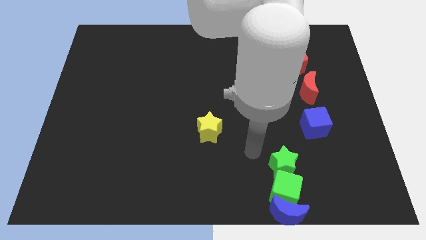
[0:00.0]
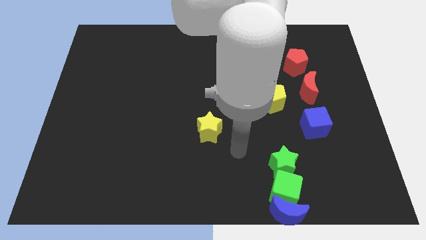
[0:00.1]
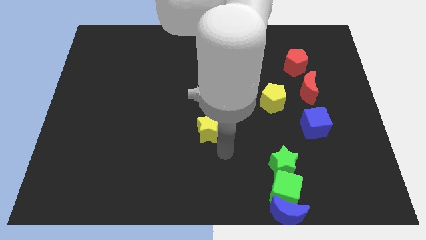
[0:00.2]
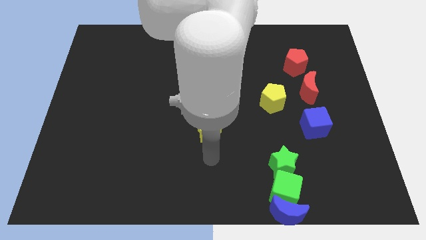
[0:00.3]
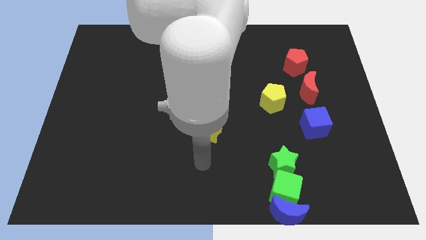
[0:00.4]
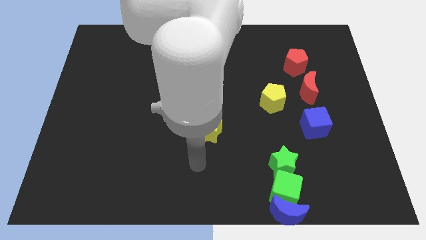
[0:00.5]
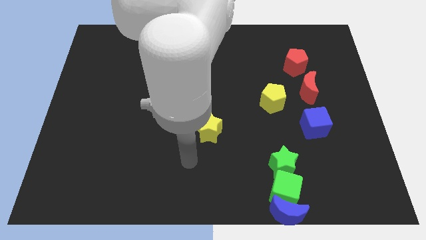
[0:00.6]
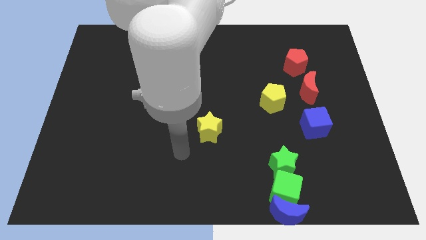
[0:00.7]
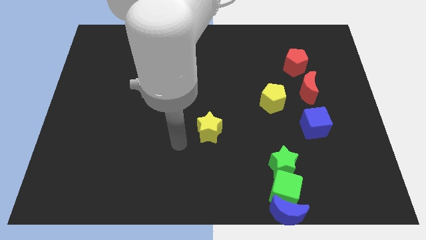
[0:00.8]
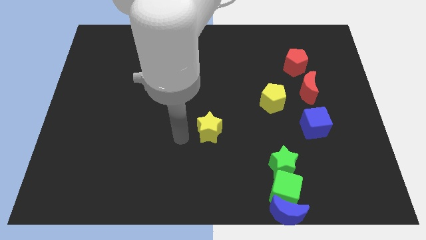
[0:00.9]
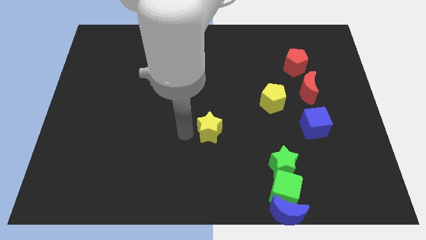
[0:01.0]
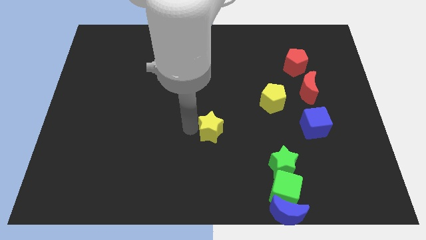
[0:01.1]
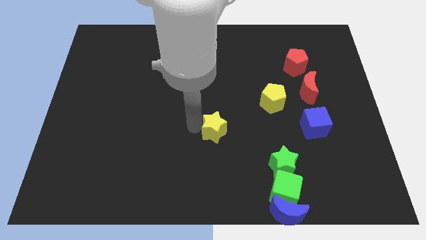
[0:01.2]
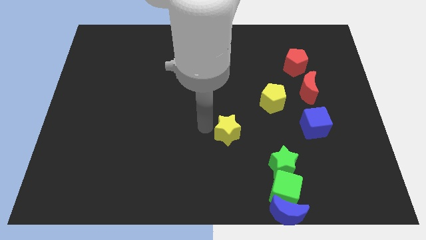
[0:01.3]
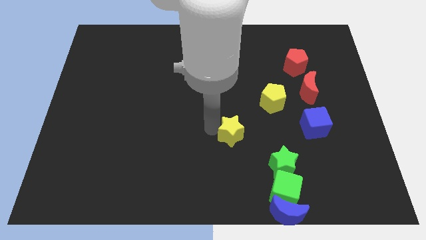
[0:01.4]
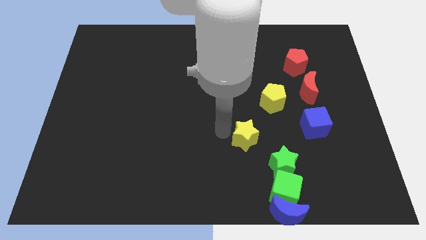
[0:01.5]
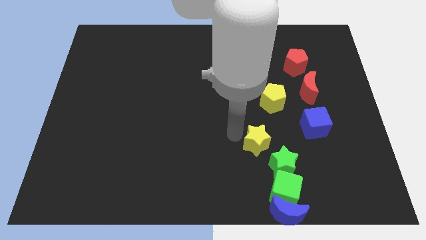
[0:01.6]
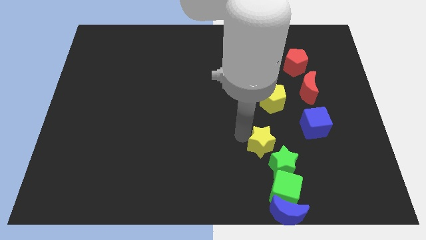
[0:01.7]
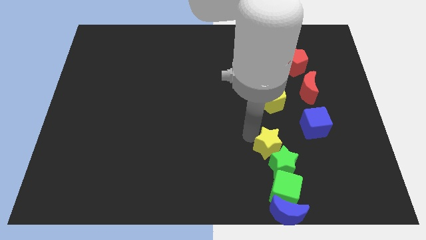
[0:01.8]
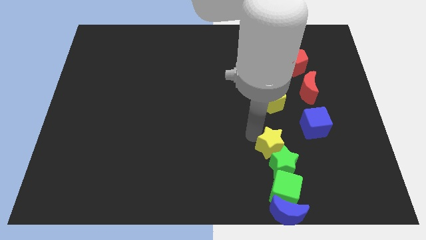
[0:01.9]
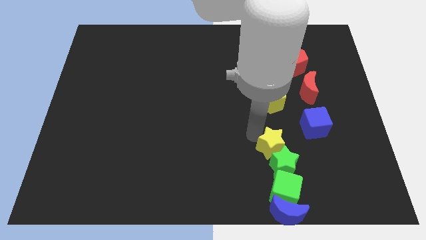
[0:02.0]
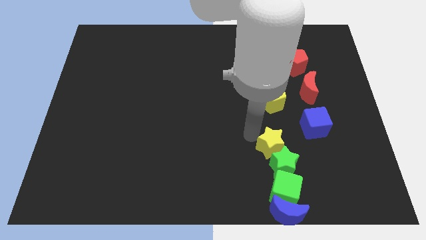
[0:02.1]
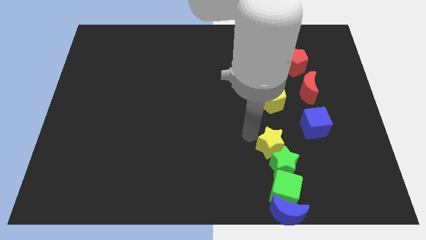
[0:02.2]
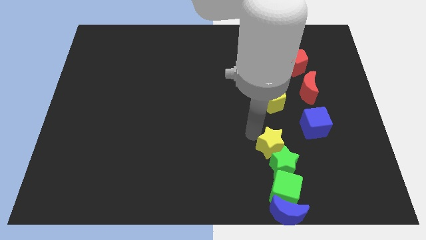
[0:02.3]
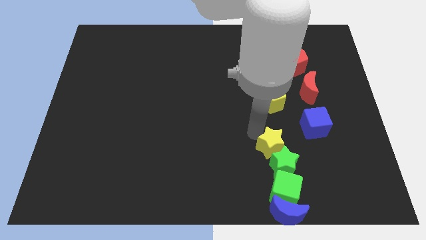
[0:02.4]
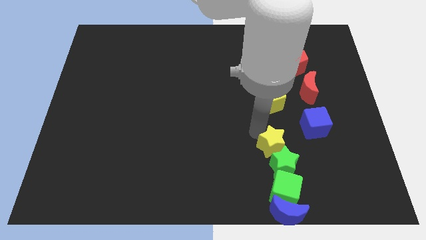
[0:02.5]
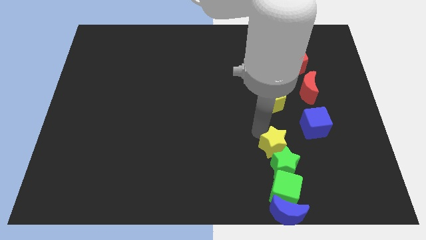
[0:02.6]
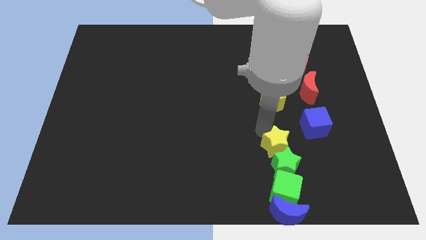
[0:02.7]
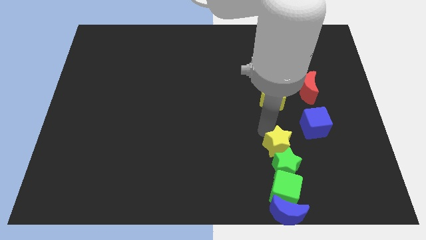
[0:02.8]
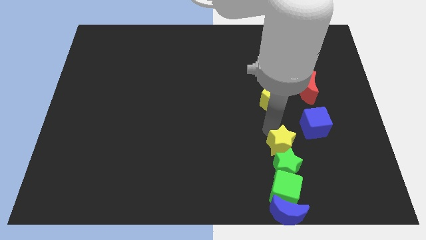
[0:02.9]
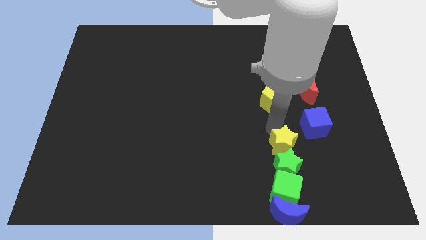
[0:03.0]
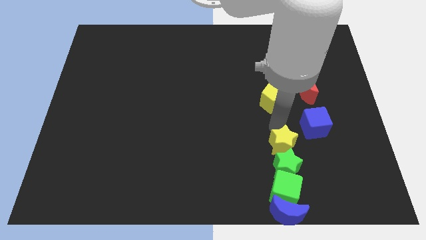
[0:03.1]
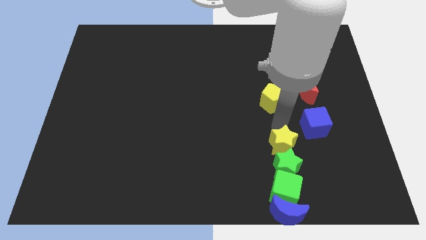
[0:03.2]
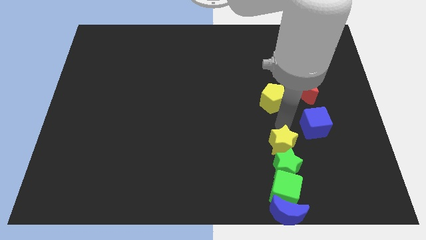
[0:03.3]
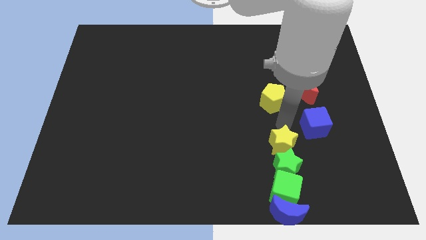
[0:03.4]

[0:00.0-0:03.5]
move the yellow star to the top side of the green star

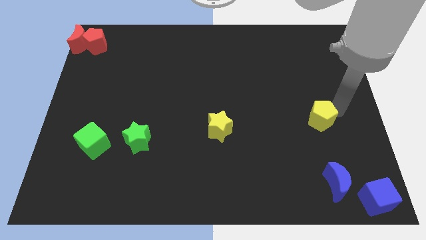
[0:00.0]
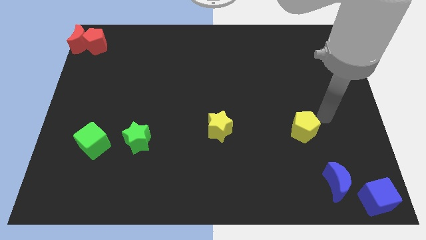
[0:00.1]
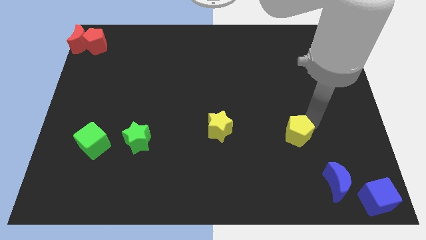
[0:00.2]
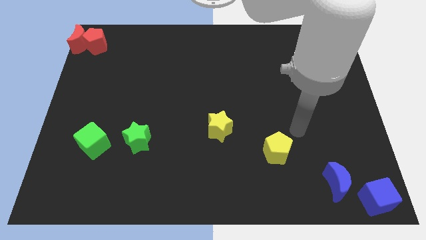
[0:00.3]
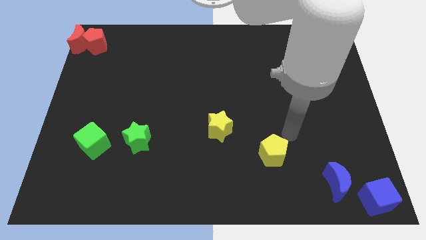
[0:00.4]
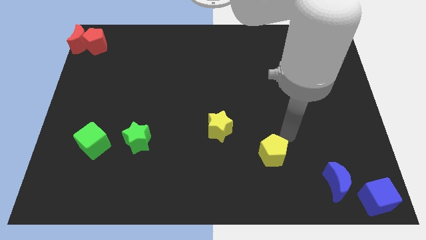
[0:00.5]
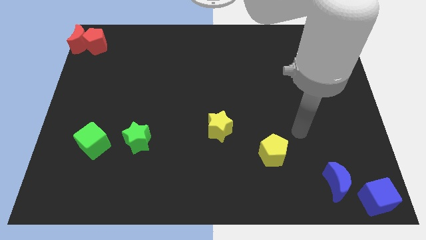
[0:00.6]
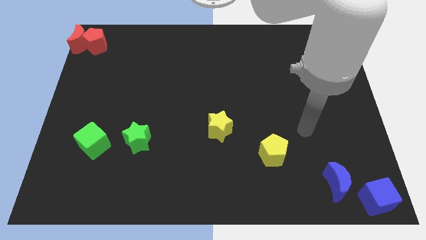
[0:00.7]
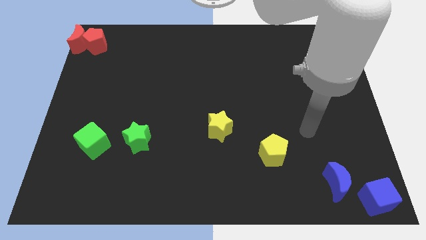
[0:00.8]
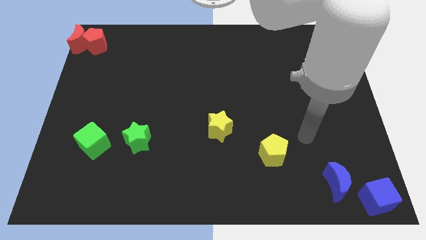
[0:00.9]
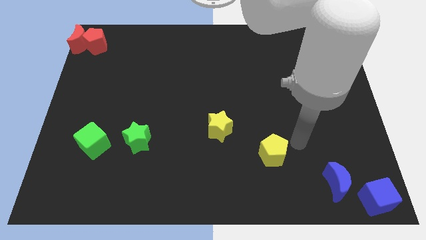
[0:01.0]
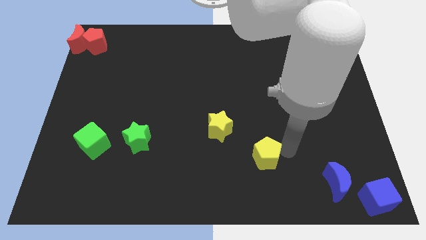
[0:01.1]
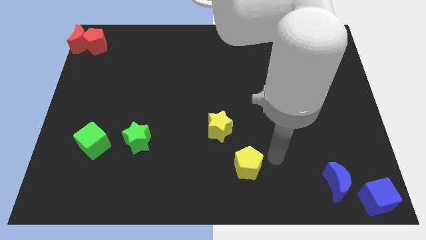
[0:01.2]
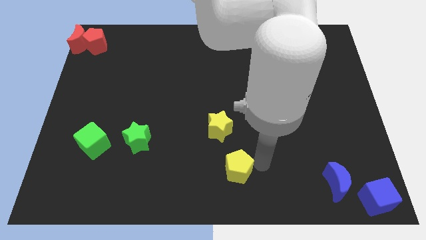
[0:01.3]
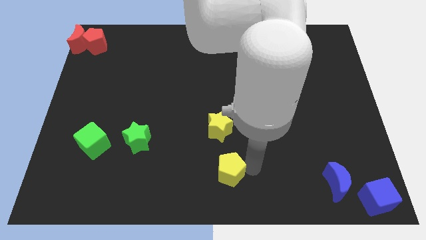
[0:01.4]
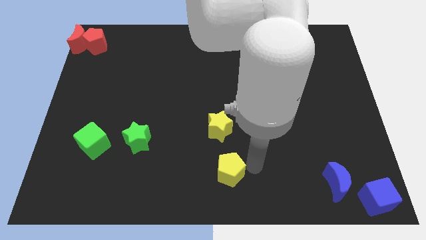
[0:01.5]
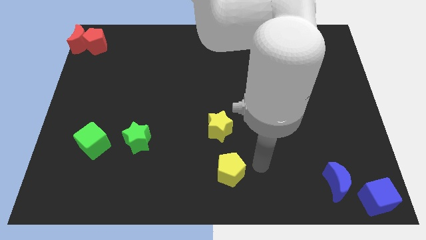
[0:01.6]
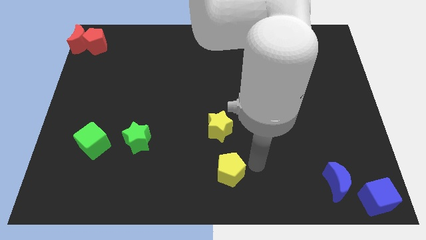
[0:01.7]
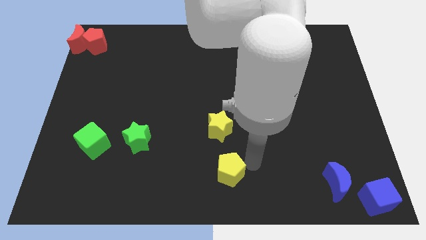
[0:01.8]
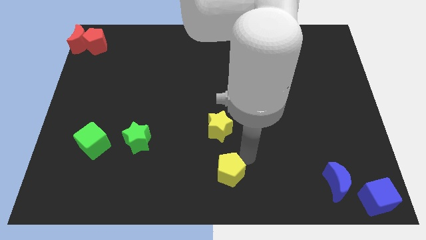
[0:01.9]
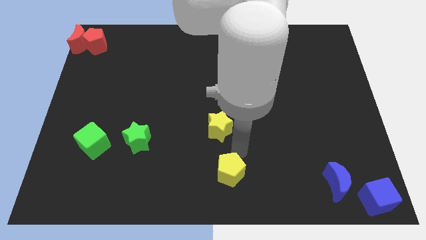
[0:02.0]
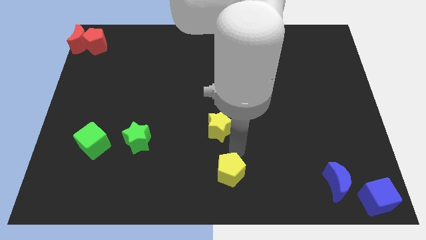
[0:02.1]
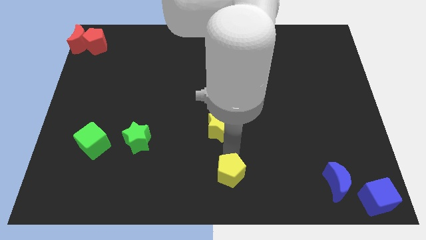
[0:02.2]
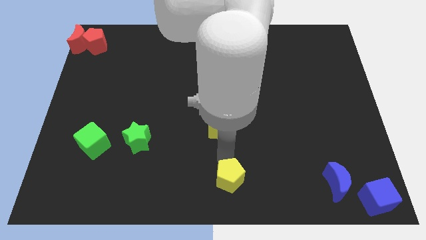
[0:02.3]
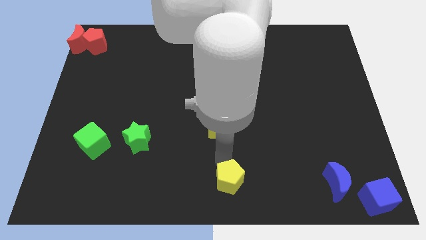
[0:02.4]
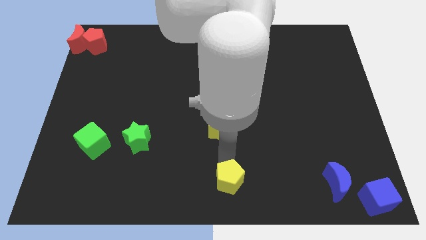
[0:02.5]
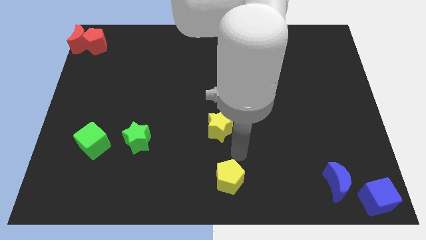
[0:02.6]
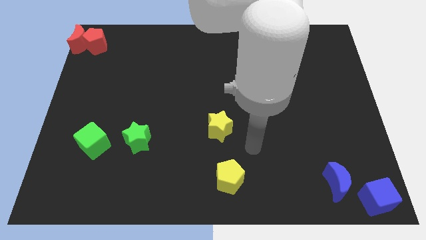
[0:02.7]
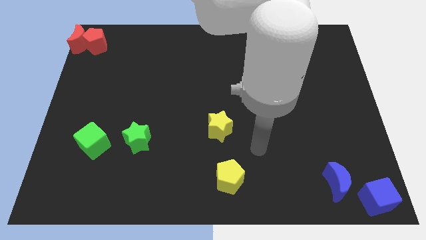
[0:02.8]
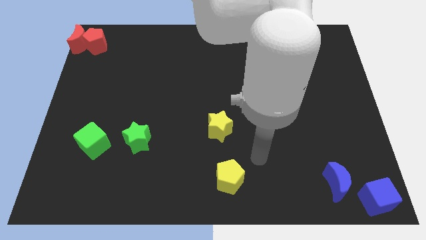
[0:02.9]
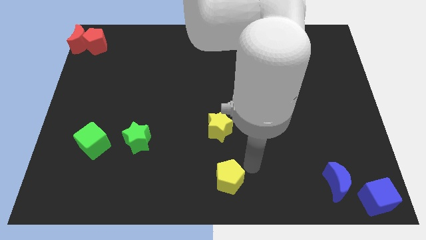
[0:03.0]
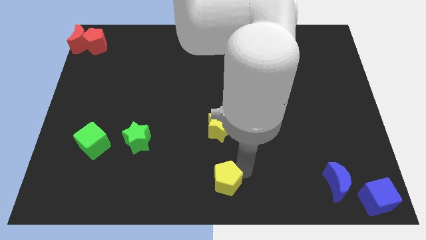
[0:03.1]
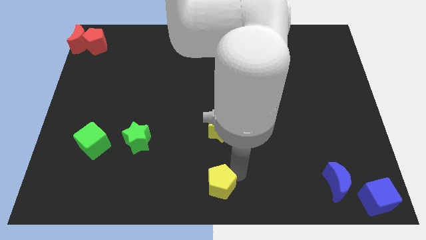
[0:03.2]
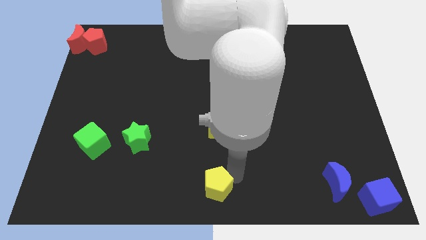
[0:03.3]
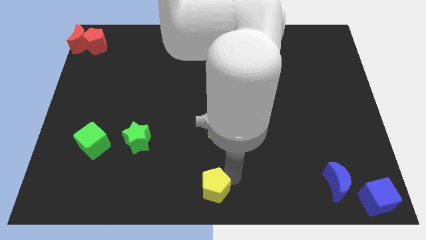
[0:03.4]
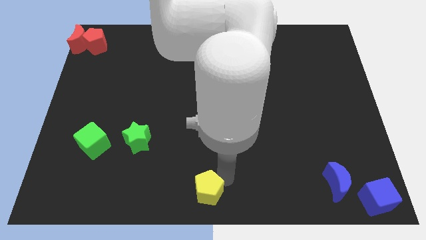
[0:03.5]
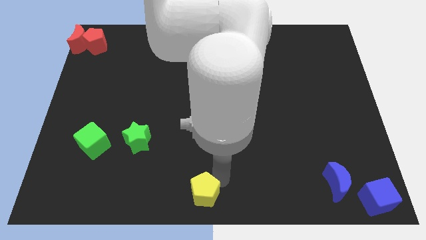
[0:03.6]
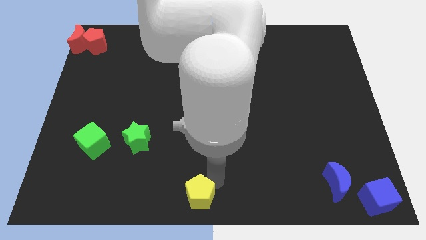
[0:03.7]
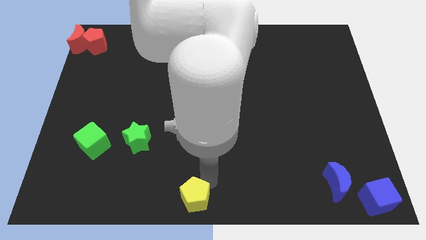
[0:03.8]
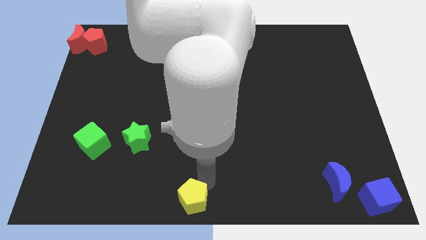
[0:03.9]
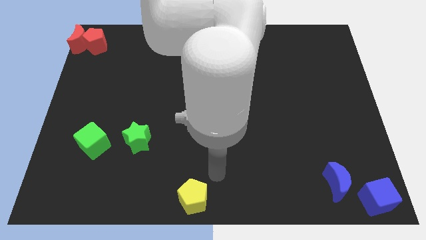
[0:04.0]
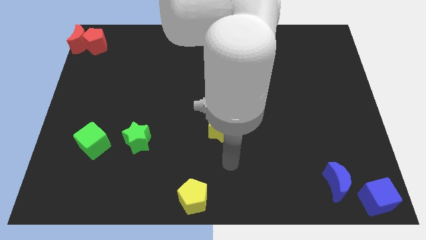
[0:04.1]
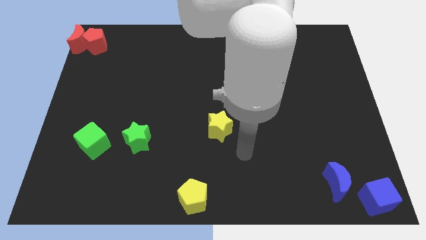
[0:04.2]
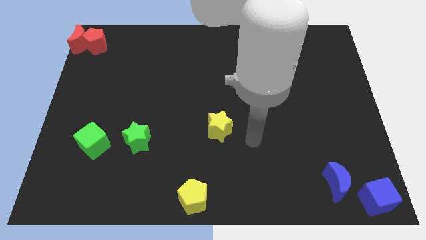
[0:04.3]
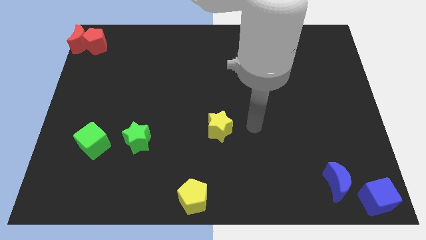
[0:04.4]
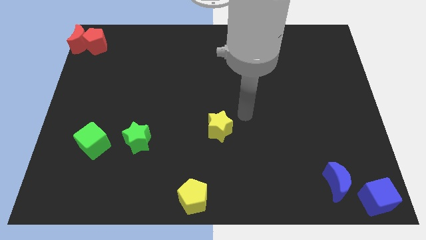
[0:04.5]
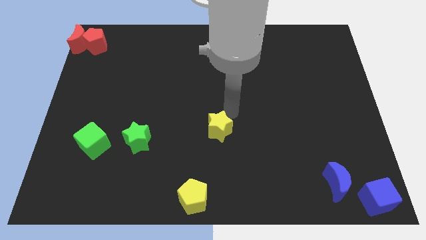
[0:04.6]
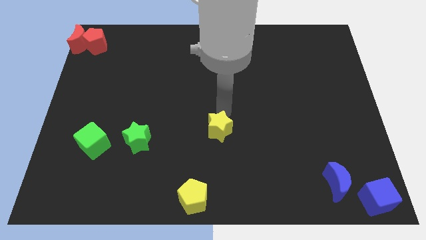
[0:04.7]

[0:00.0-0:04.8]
place the yellow pentagon diagonally below the yellow star

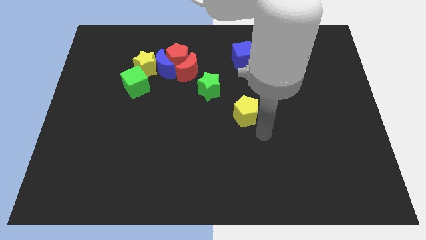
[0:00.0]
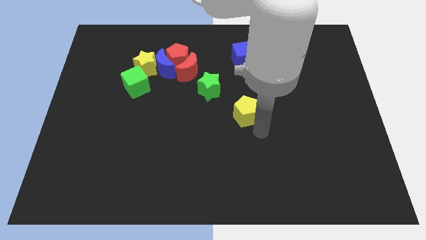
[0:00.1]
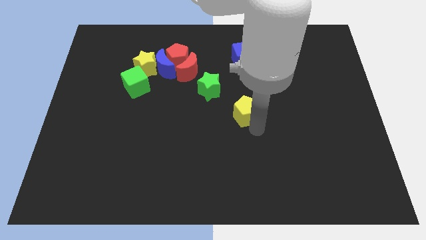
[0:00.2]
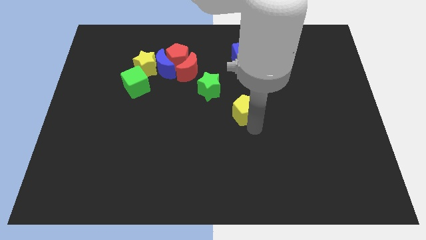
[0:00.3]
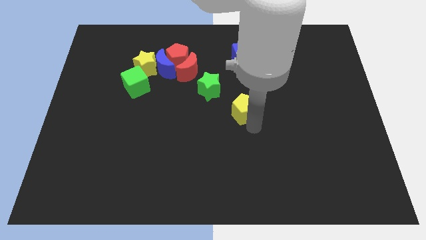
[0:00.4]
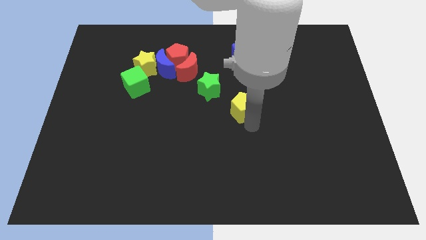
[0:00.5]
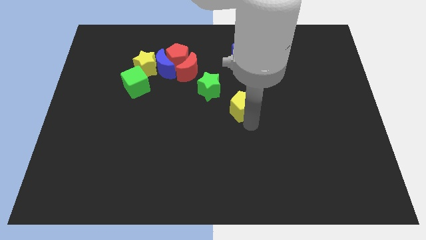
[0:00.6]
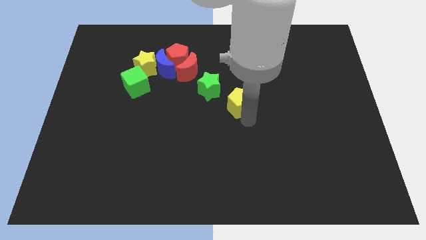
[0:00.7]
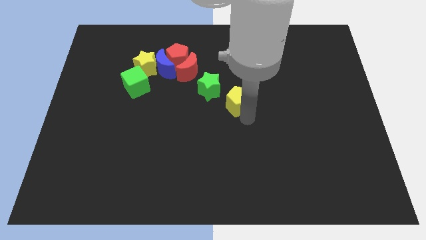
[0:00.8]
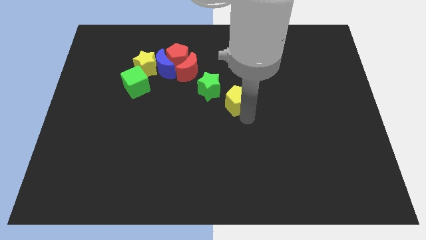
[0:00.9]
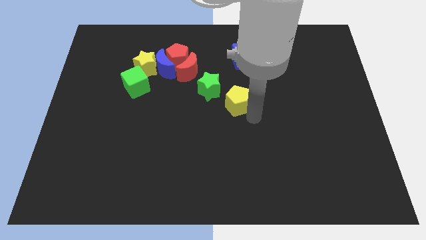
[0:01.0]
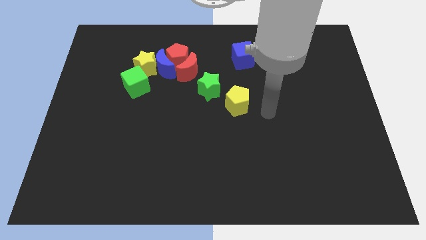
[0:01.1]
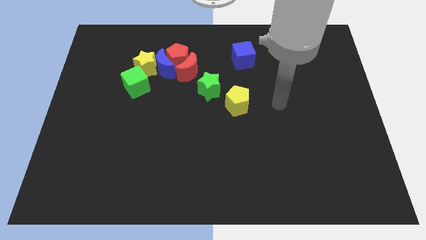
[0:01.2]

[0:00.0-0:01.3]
move the yellow pentagon towards the green star
